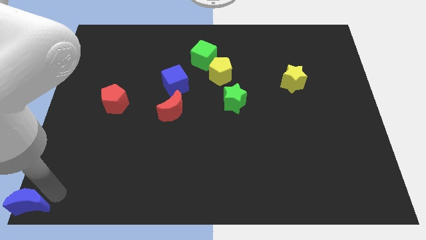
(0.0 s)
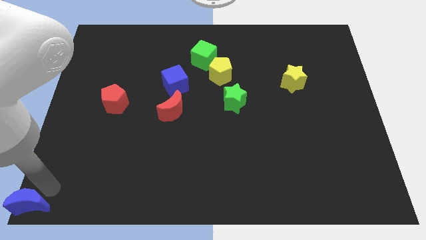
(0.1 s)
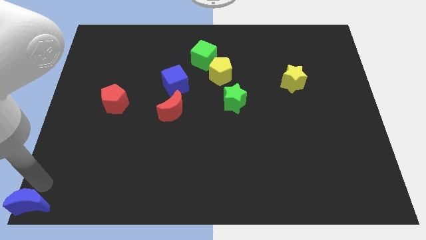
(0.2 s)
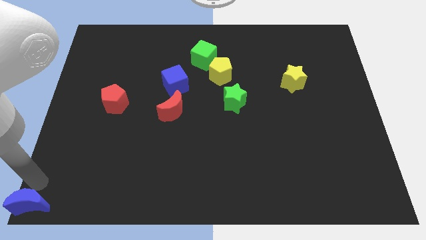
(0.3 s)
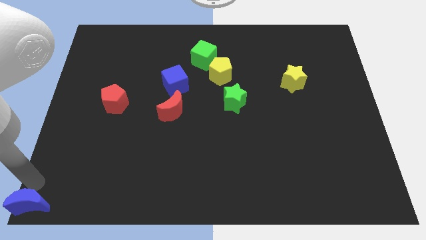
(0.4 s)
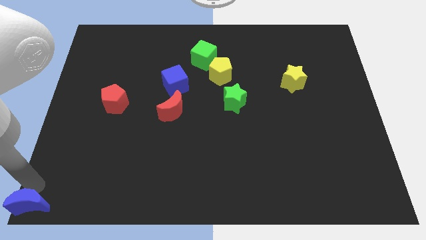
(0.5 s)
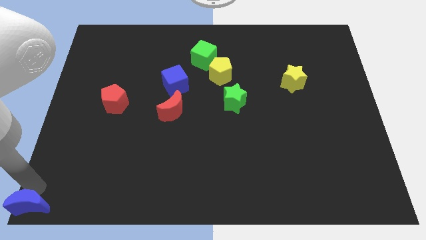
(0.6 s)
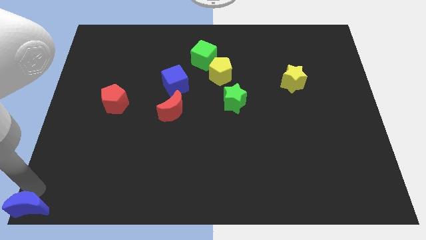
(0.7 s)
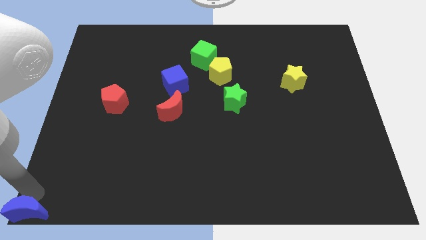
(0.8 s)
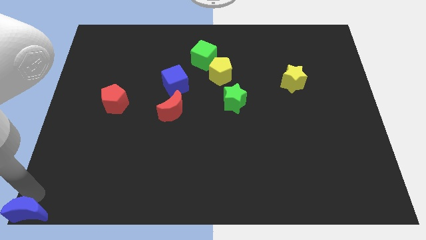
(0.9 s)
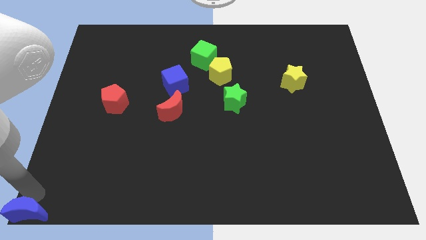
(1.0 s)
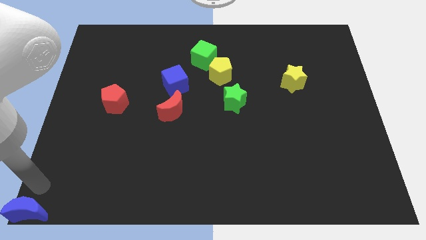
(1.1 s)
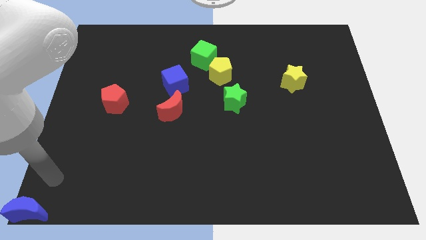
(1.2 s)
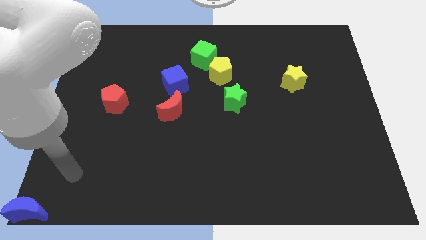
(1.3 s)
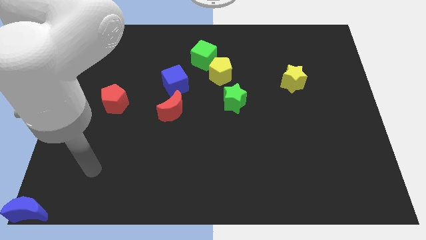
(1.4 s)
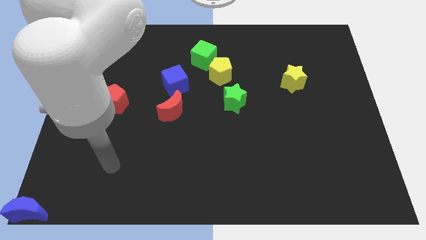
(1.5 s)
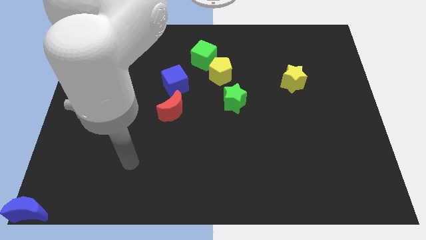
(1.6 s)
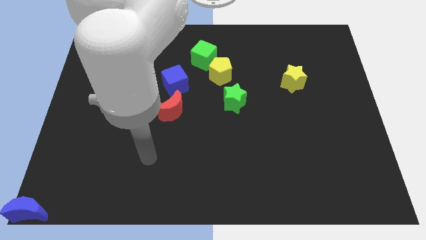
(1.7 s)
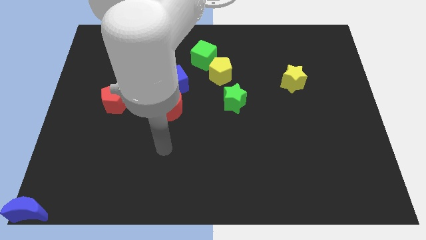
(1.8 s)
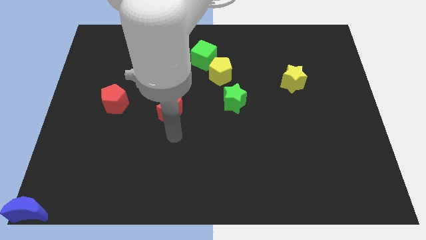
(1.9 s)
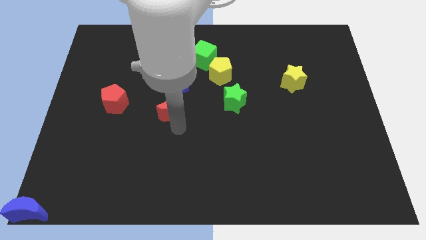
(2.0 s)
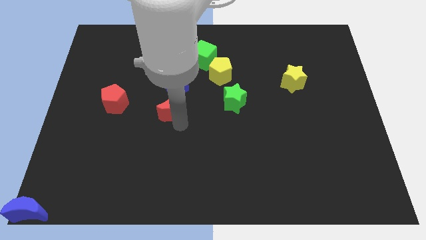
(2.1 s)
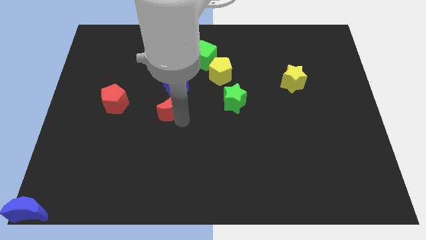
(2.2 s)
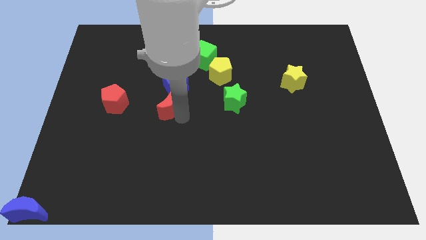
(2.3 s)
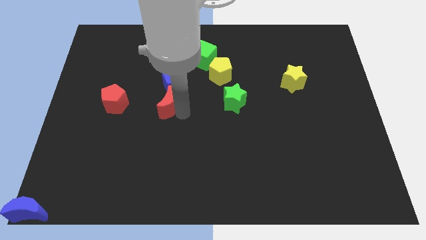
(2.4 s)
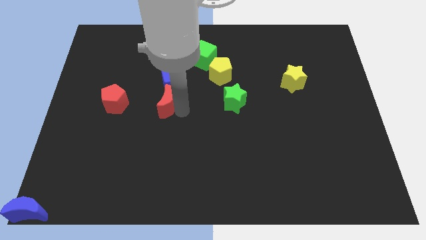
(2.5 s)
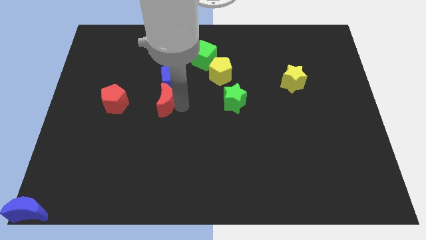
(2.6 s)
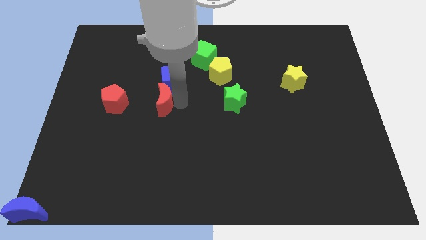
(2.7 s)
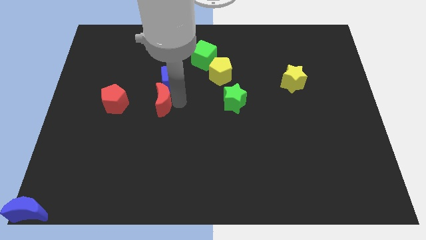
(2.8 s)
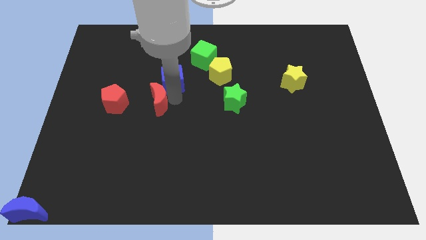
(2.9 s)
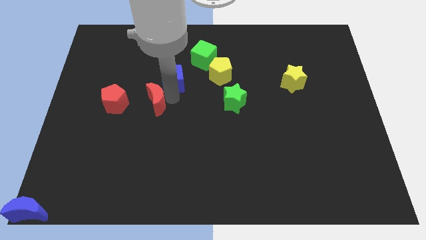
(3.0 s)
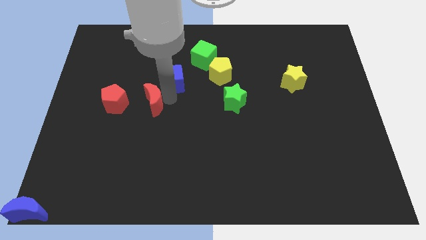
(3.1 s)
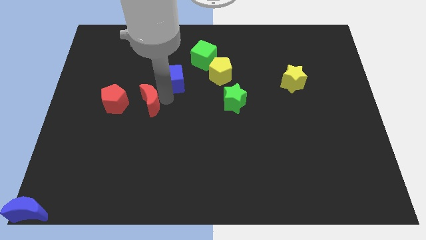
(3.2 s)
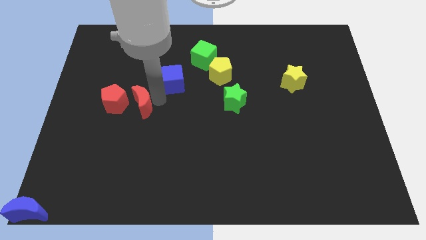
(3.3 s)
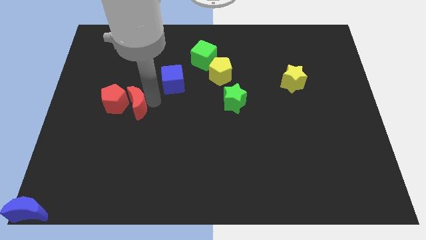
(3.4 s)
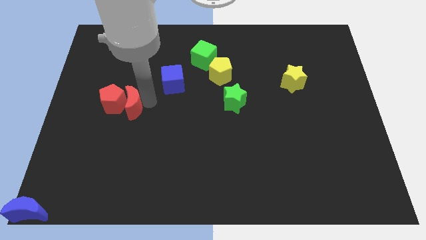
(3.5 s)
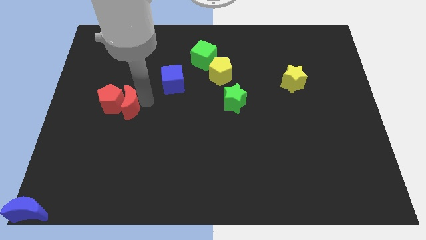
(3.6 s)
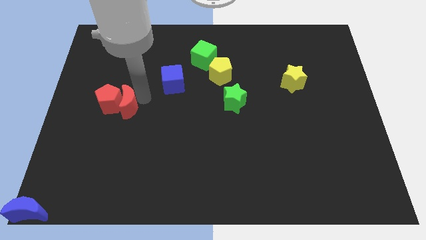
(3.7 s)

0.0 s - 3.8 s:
push the red moon into the red pentagon

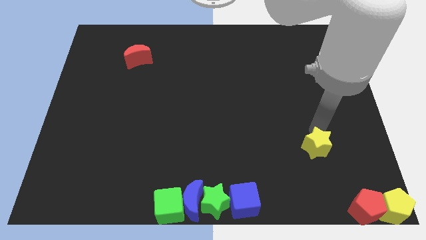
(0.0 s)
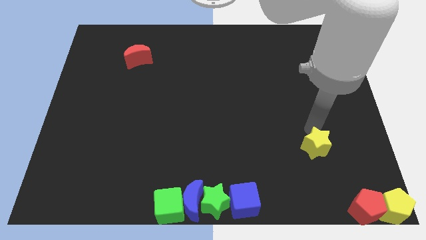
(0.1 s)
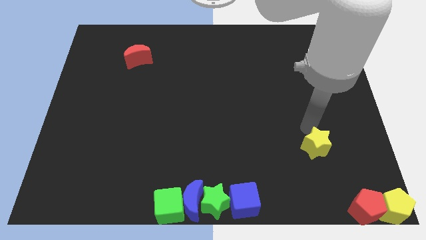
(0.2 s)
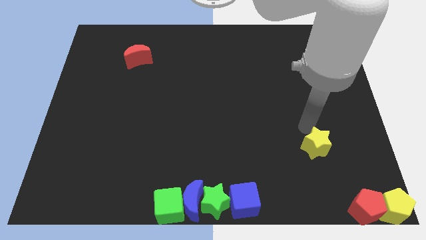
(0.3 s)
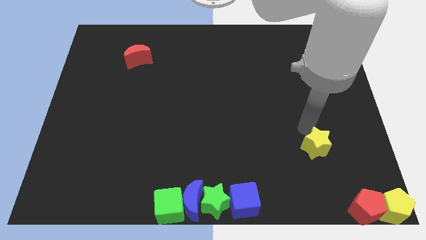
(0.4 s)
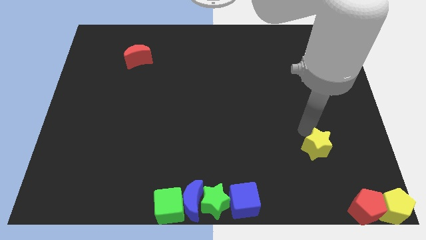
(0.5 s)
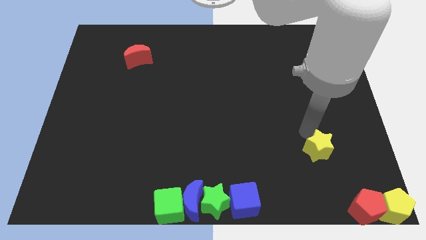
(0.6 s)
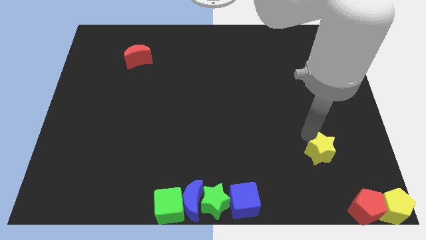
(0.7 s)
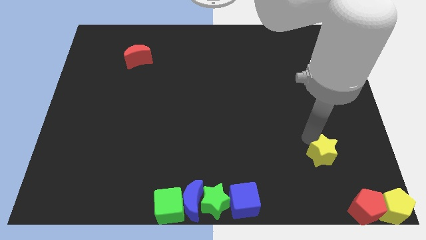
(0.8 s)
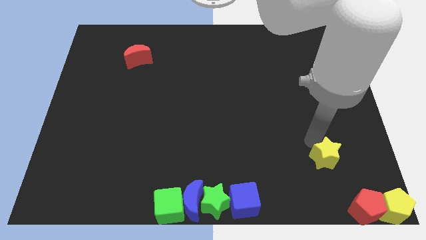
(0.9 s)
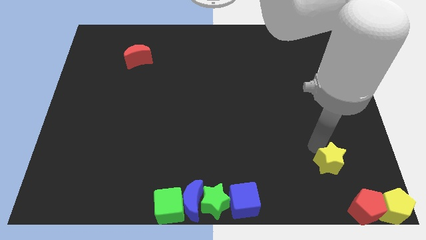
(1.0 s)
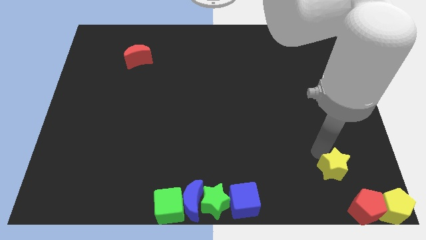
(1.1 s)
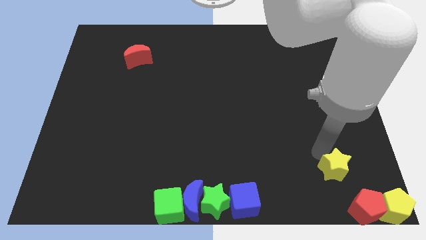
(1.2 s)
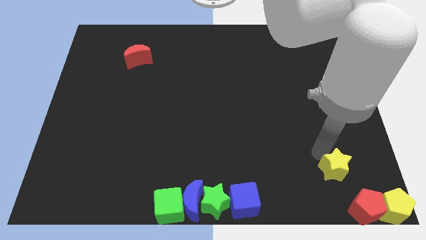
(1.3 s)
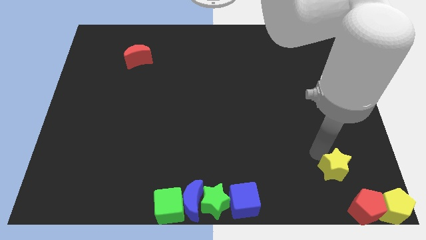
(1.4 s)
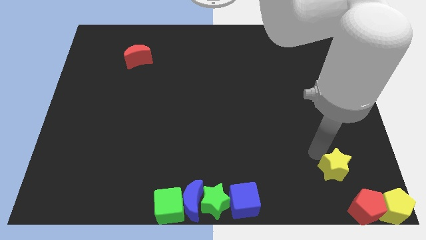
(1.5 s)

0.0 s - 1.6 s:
move the yellow star to the bottom right corner of the board

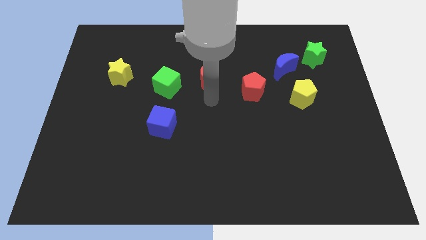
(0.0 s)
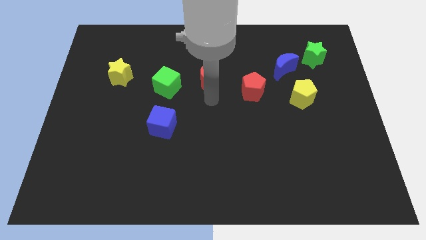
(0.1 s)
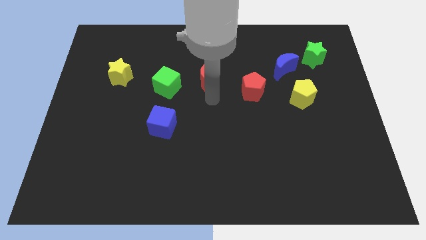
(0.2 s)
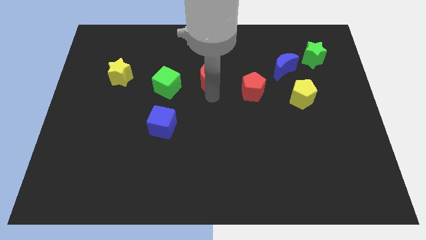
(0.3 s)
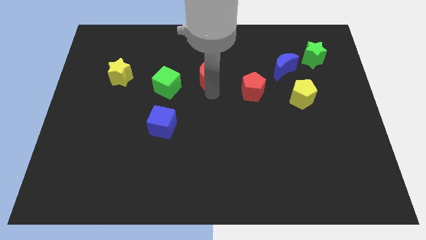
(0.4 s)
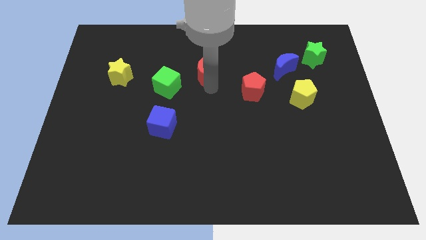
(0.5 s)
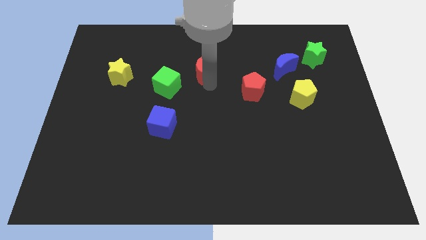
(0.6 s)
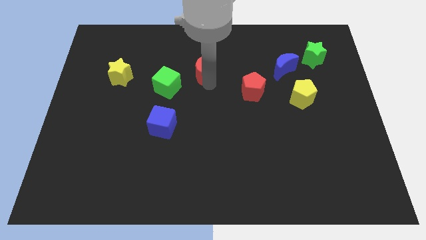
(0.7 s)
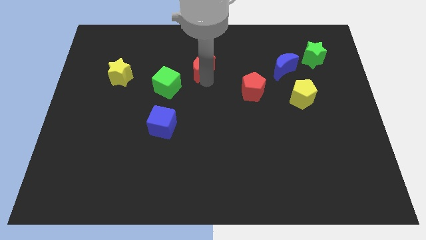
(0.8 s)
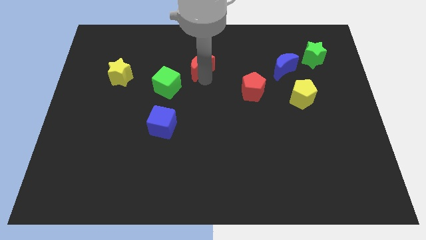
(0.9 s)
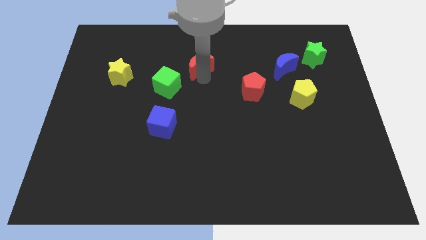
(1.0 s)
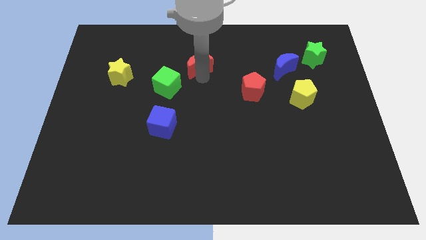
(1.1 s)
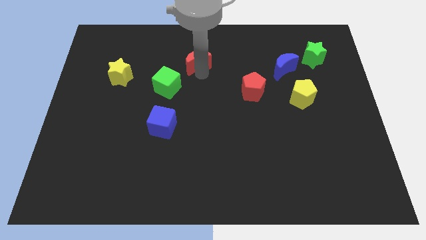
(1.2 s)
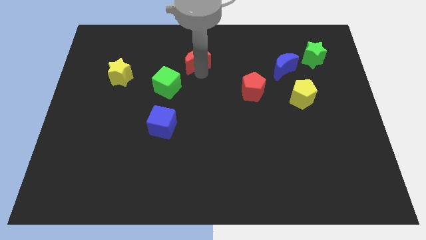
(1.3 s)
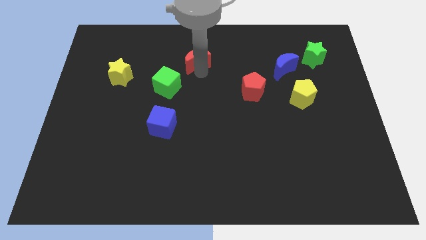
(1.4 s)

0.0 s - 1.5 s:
slightly move the red moon towards top side of the board

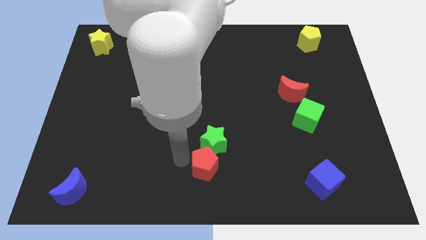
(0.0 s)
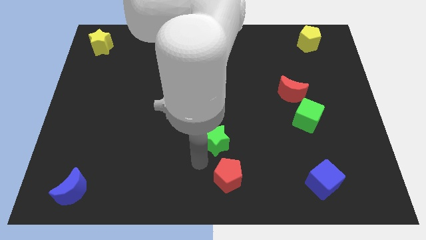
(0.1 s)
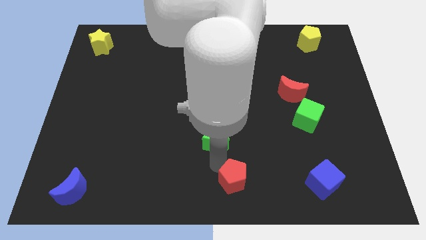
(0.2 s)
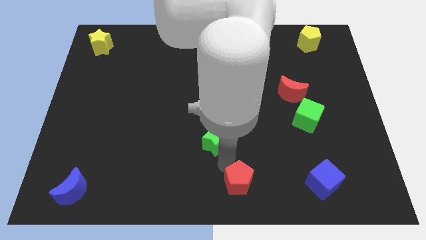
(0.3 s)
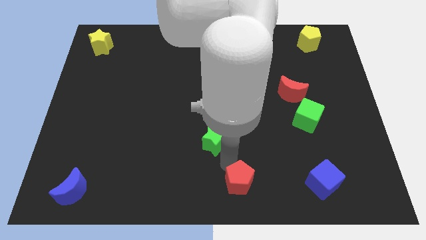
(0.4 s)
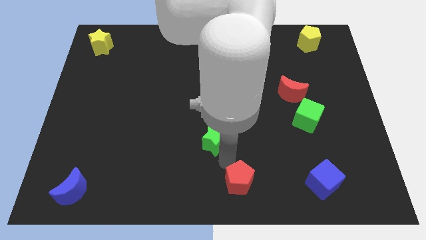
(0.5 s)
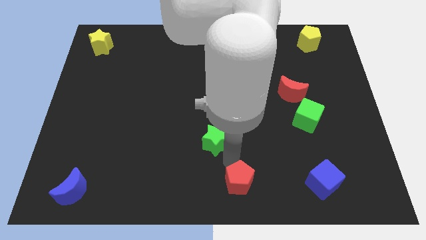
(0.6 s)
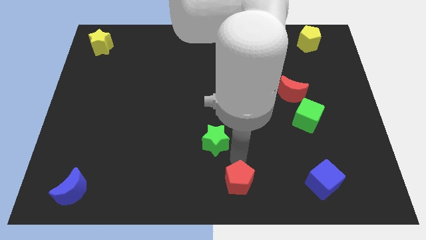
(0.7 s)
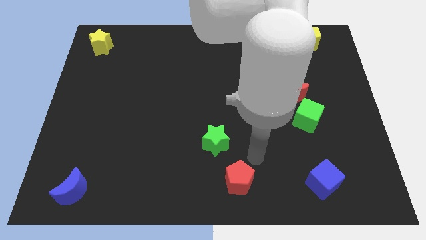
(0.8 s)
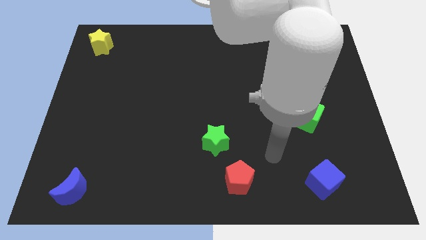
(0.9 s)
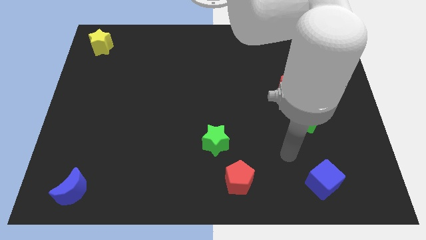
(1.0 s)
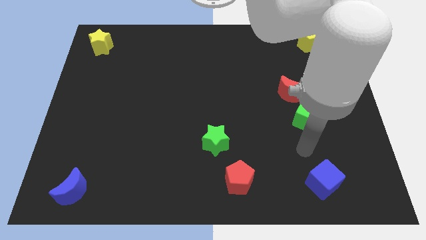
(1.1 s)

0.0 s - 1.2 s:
separate the red pentagon from the green star

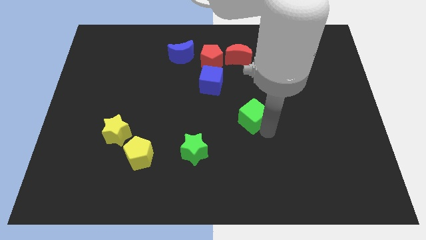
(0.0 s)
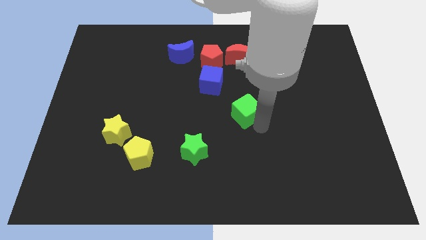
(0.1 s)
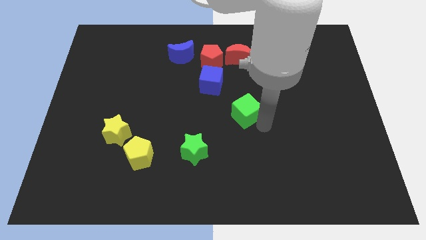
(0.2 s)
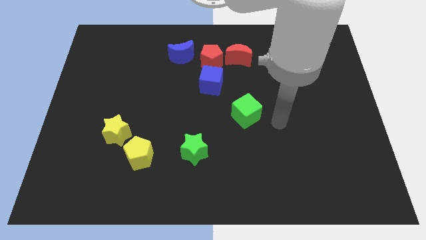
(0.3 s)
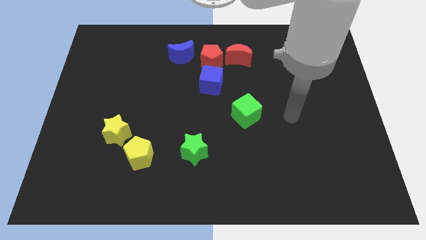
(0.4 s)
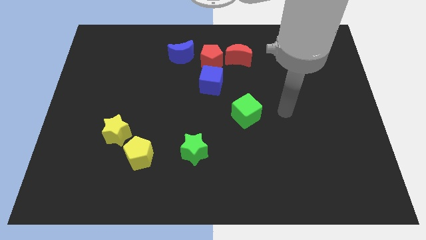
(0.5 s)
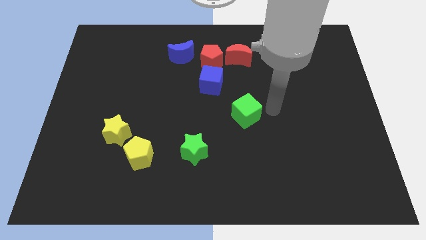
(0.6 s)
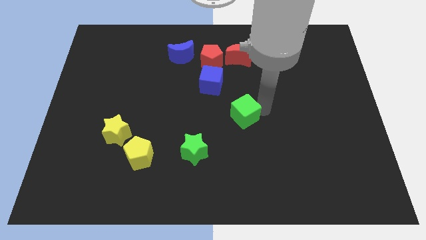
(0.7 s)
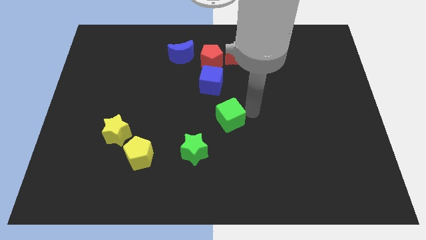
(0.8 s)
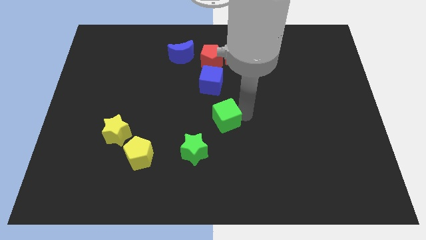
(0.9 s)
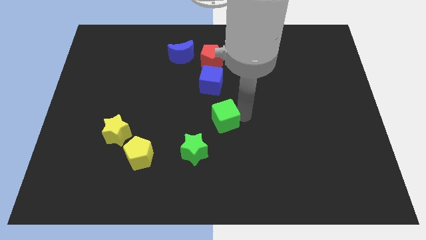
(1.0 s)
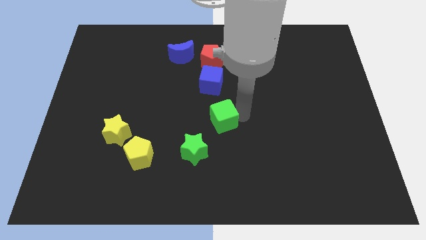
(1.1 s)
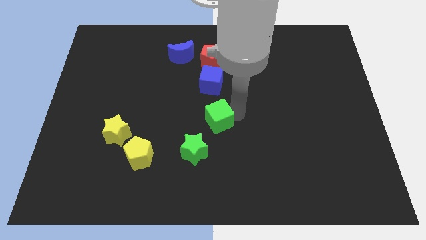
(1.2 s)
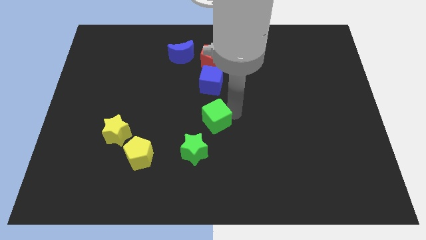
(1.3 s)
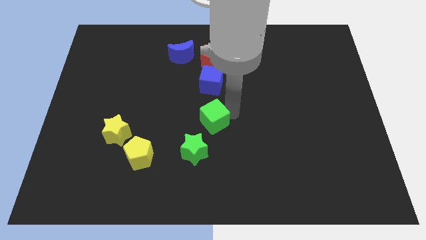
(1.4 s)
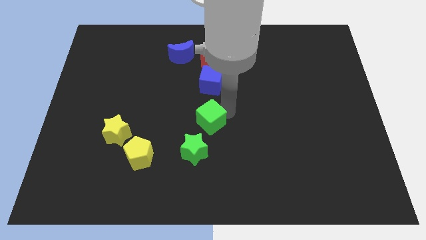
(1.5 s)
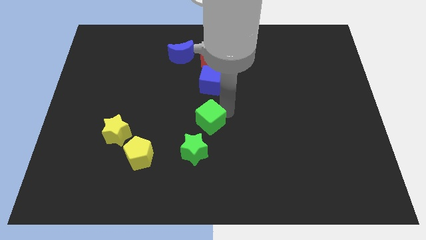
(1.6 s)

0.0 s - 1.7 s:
place green cube in between blue cube and green star
